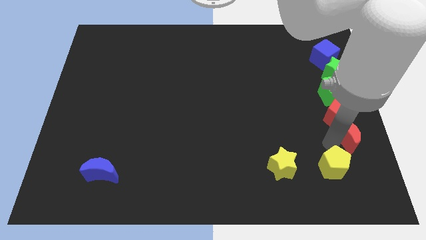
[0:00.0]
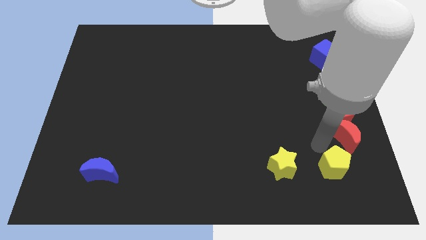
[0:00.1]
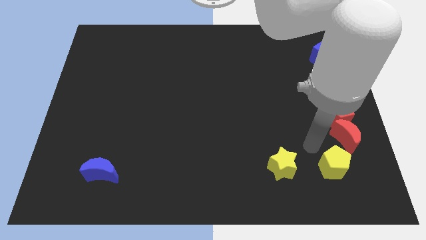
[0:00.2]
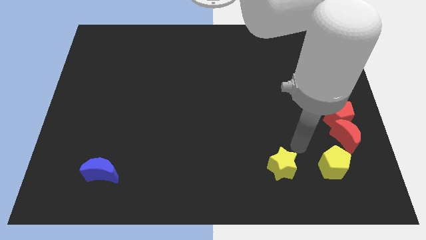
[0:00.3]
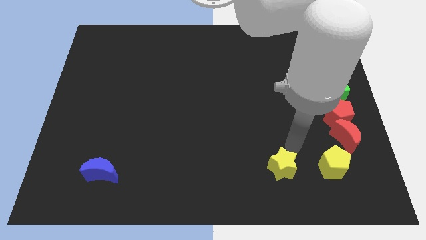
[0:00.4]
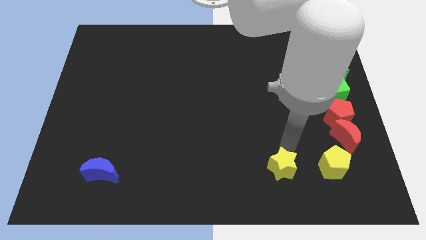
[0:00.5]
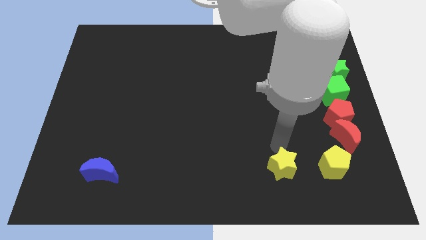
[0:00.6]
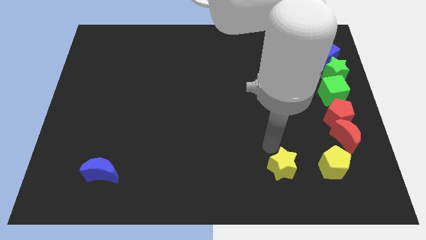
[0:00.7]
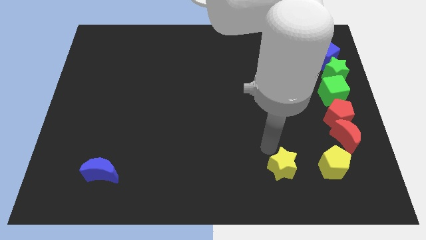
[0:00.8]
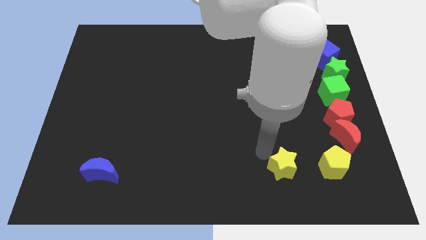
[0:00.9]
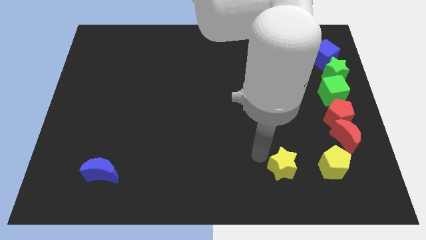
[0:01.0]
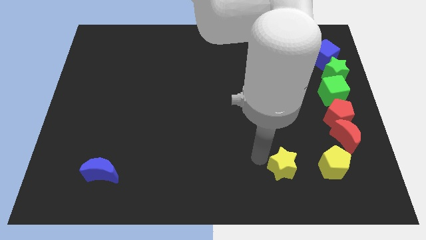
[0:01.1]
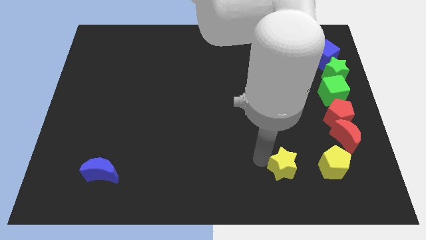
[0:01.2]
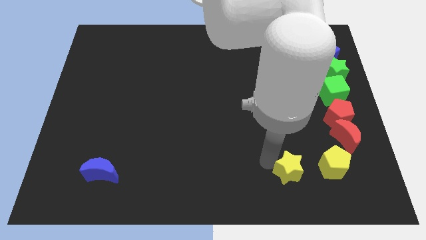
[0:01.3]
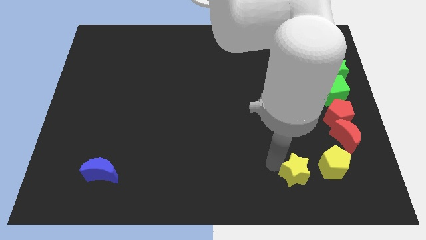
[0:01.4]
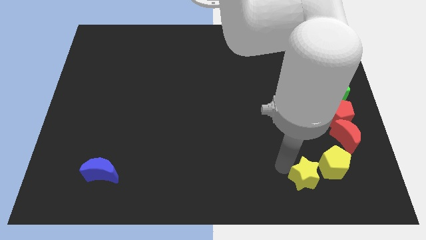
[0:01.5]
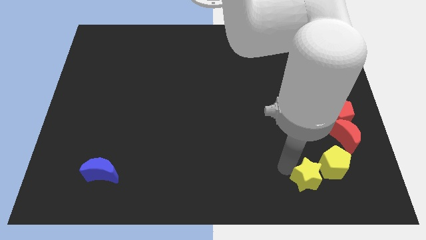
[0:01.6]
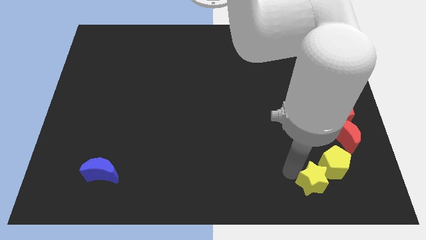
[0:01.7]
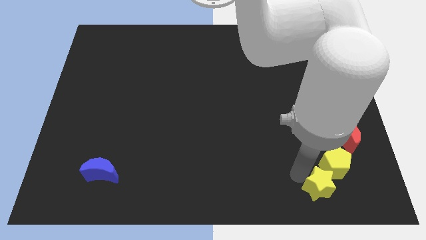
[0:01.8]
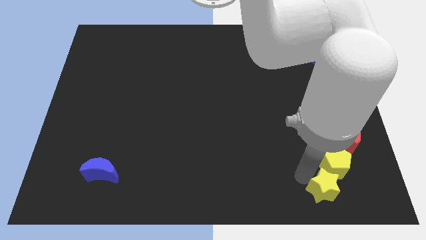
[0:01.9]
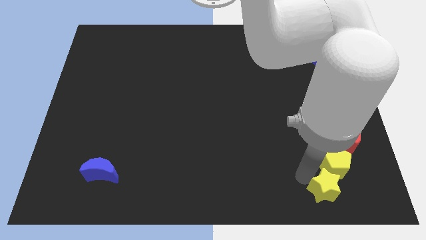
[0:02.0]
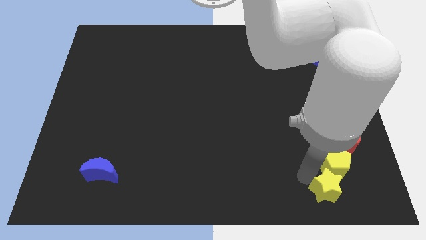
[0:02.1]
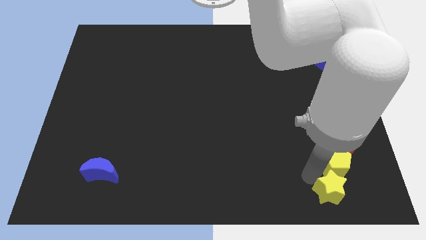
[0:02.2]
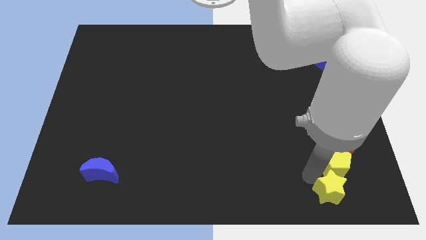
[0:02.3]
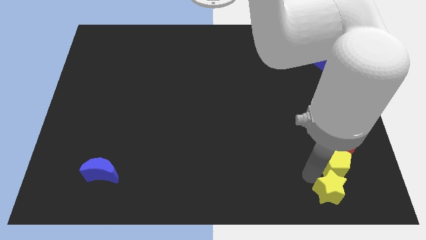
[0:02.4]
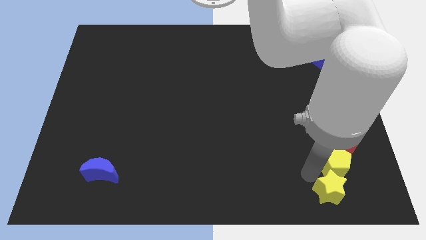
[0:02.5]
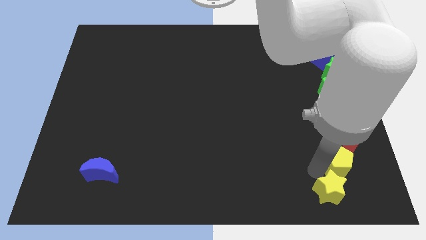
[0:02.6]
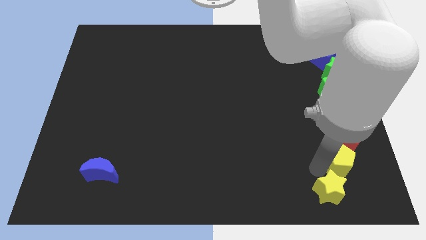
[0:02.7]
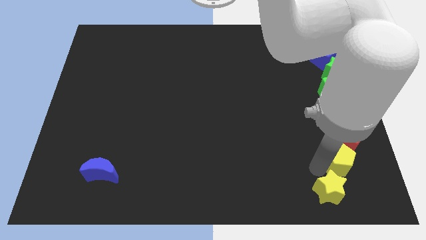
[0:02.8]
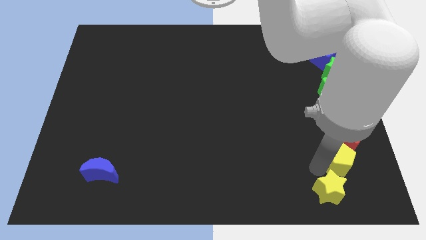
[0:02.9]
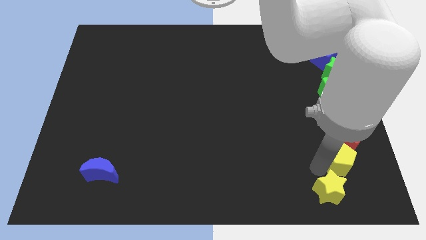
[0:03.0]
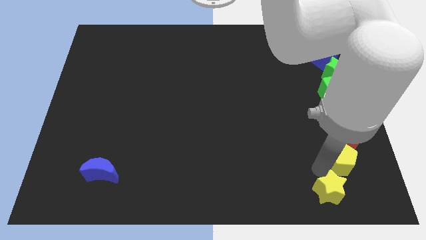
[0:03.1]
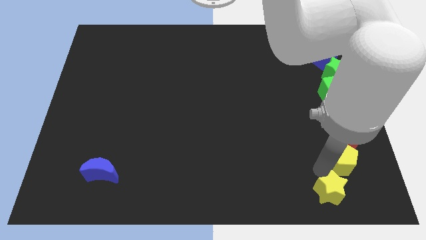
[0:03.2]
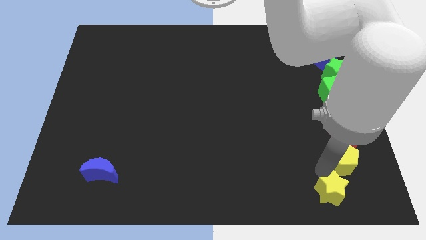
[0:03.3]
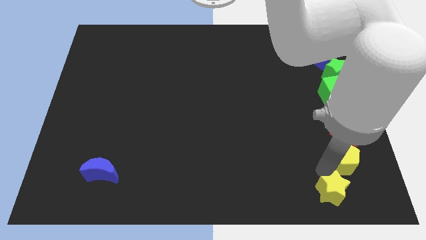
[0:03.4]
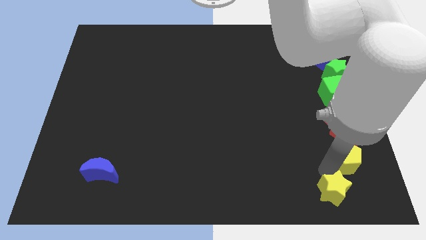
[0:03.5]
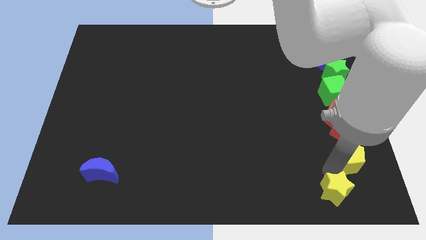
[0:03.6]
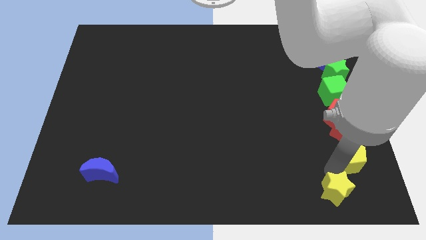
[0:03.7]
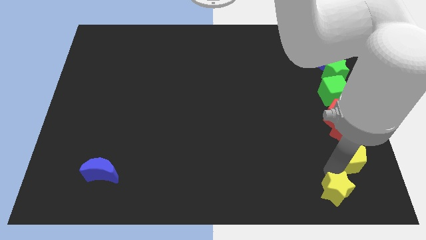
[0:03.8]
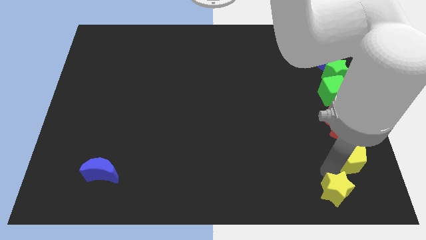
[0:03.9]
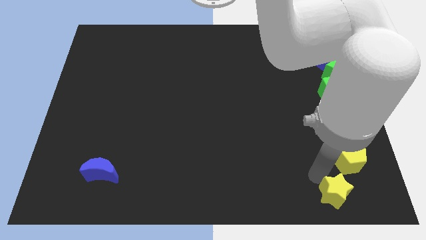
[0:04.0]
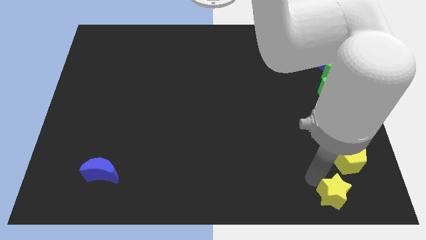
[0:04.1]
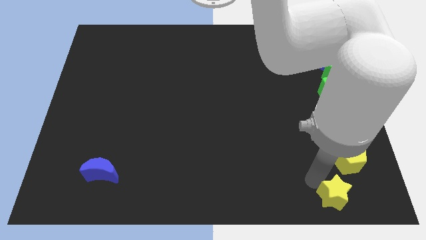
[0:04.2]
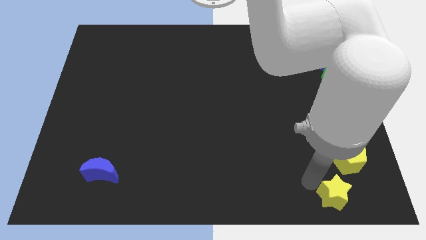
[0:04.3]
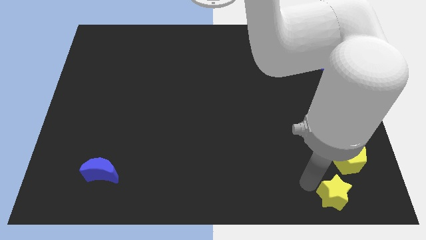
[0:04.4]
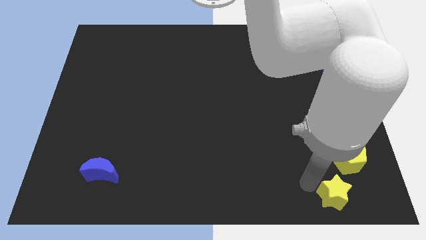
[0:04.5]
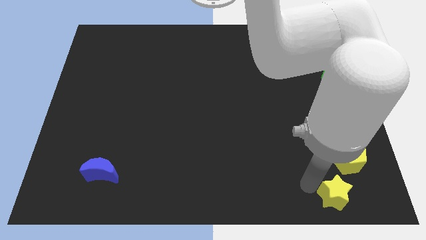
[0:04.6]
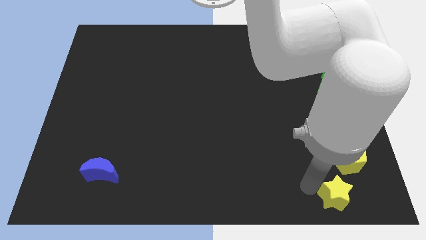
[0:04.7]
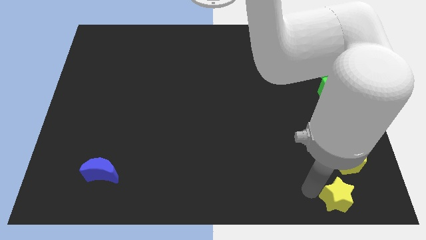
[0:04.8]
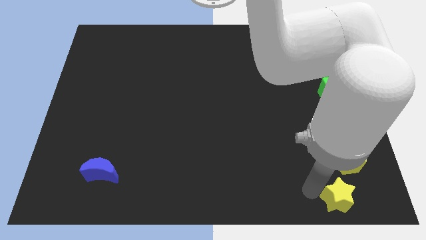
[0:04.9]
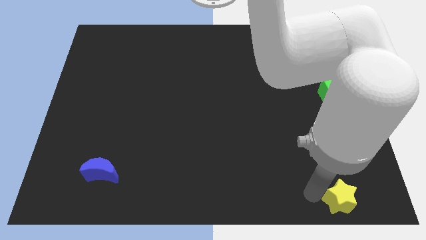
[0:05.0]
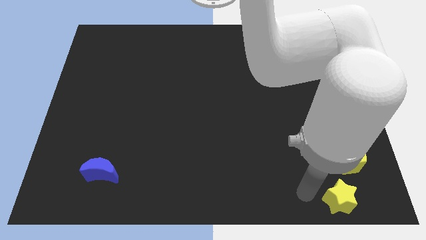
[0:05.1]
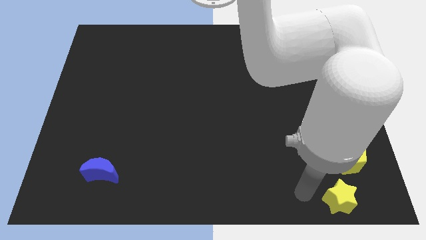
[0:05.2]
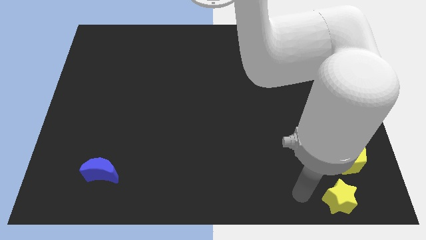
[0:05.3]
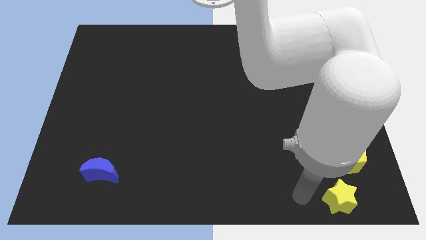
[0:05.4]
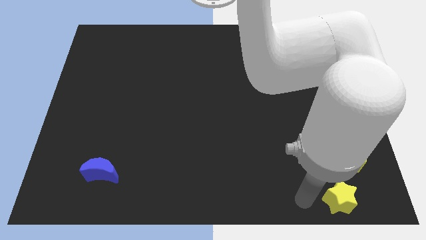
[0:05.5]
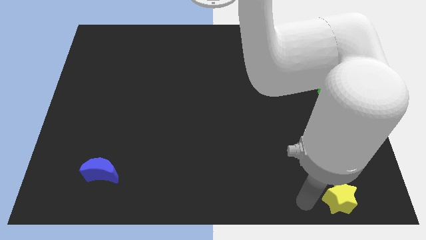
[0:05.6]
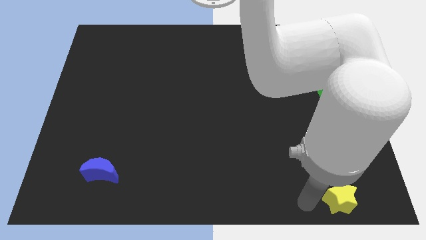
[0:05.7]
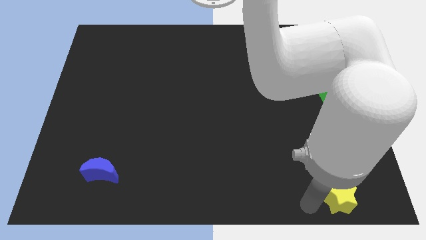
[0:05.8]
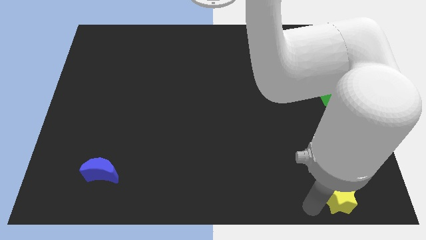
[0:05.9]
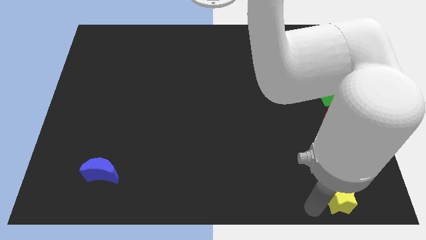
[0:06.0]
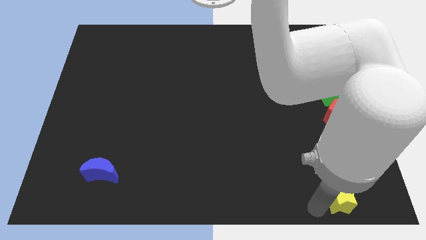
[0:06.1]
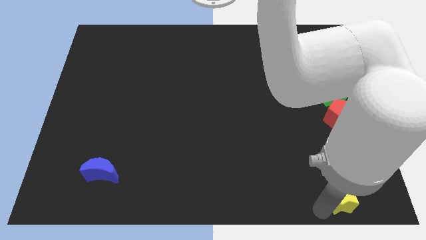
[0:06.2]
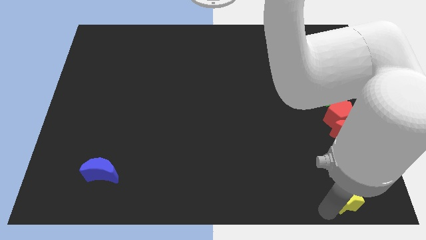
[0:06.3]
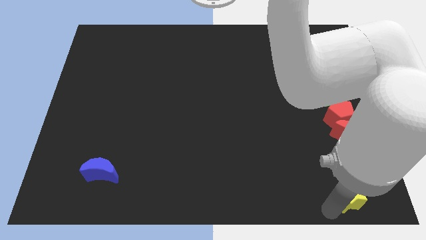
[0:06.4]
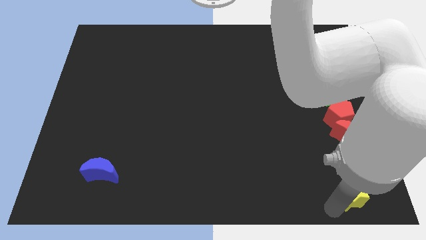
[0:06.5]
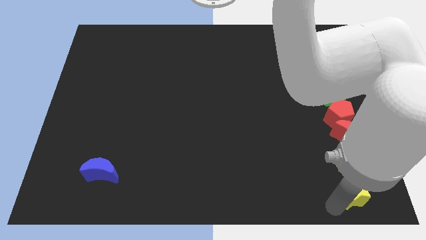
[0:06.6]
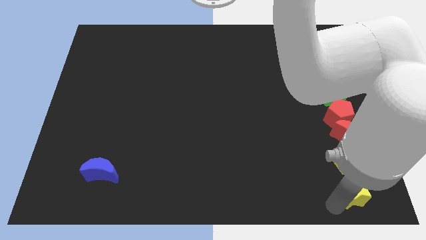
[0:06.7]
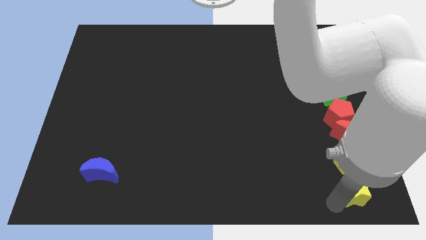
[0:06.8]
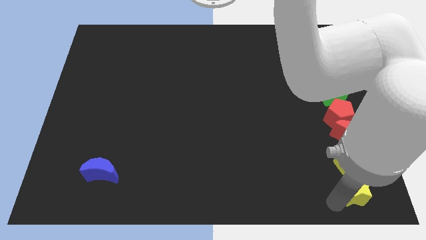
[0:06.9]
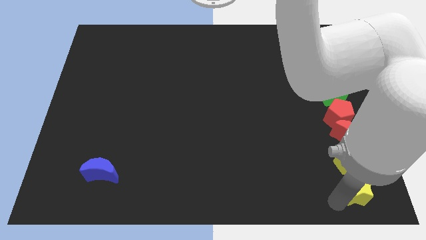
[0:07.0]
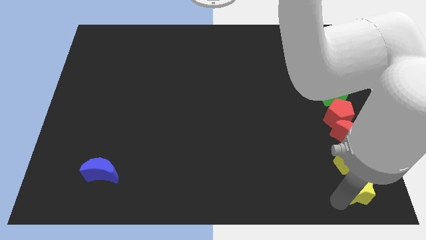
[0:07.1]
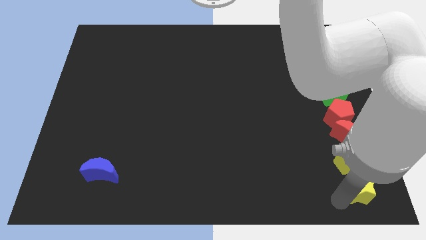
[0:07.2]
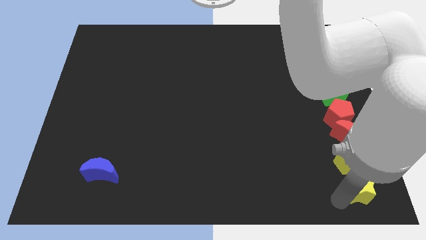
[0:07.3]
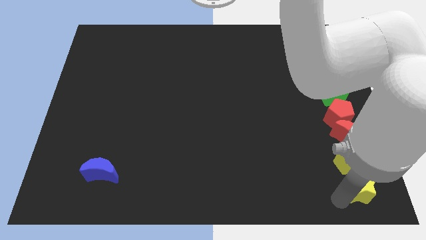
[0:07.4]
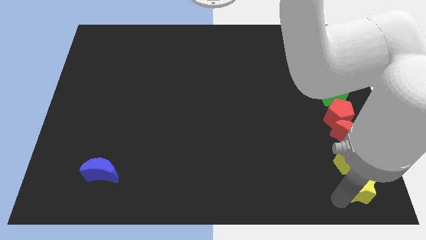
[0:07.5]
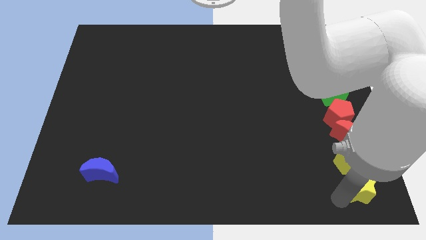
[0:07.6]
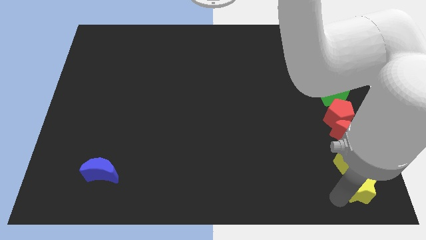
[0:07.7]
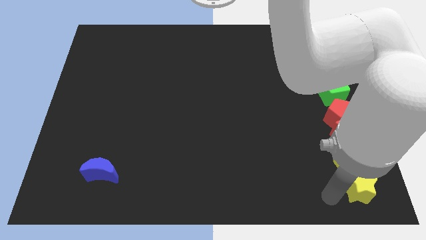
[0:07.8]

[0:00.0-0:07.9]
move the yellow blocks to the bottom right of the board

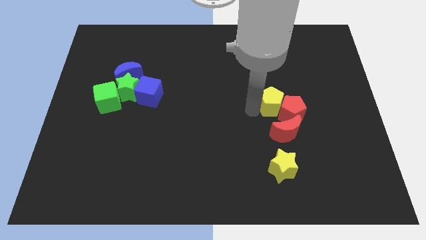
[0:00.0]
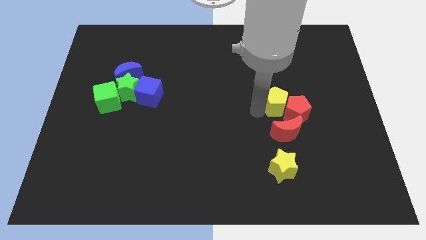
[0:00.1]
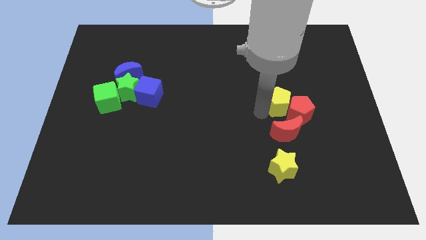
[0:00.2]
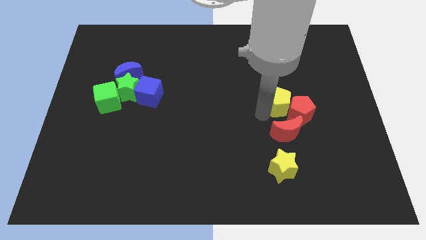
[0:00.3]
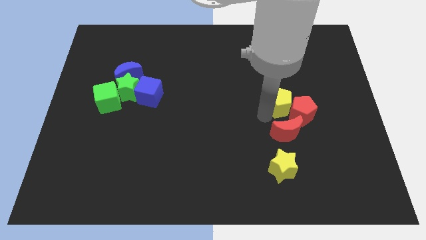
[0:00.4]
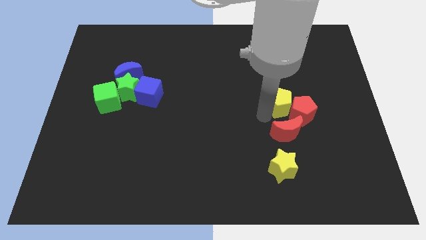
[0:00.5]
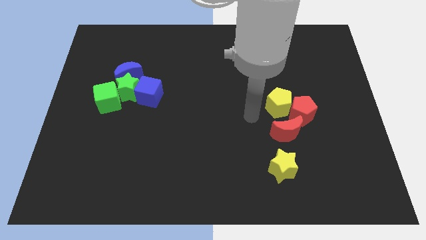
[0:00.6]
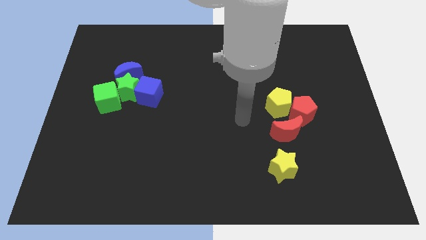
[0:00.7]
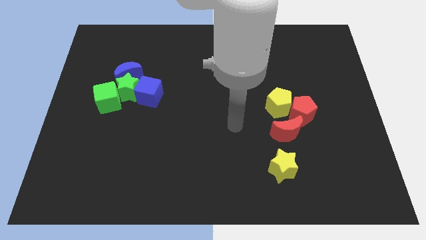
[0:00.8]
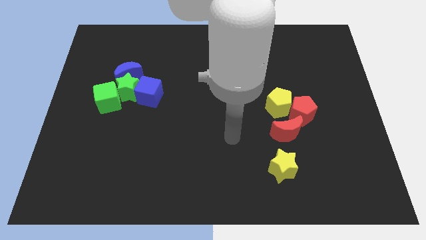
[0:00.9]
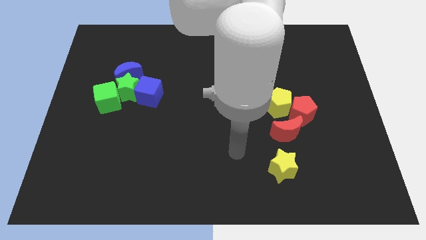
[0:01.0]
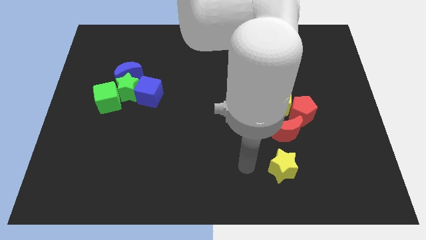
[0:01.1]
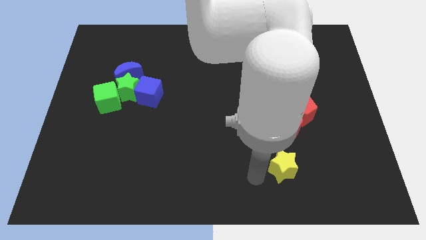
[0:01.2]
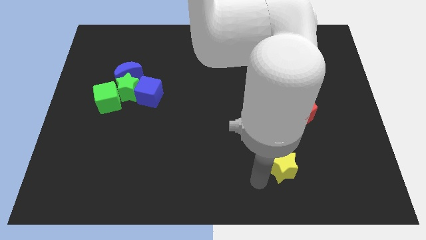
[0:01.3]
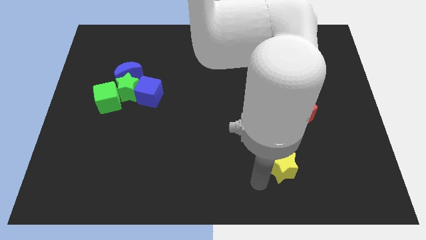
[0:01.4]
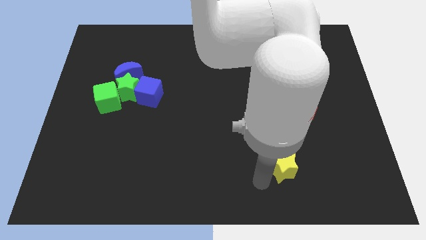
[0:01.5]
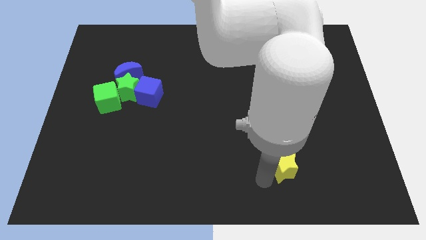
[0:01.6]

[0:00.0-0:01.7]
move your arm away from the yellow penatgon
